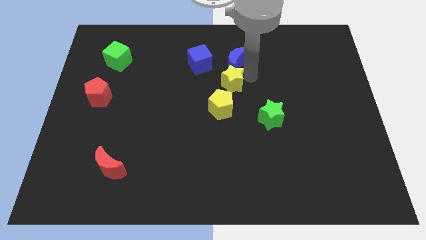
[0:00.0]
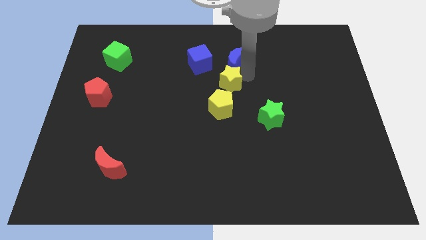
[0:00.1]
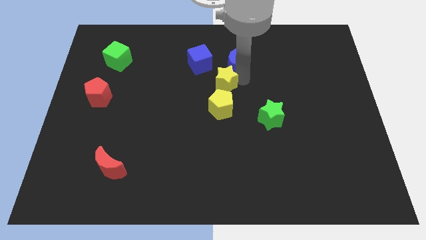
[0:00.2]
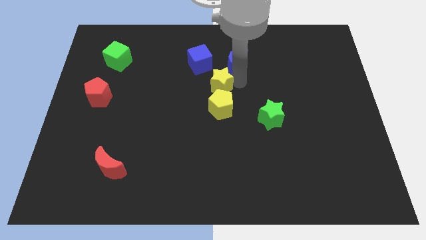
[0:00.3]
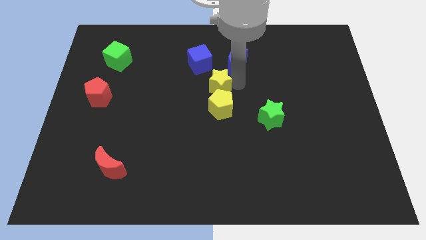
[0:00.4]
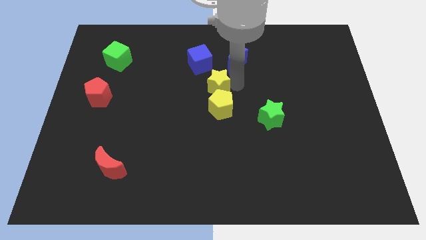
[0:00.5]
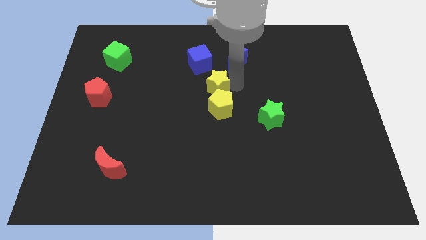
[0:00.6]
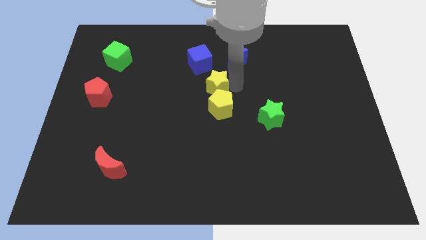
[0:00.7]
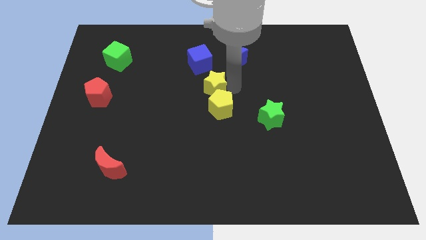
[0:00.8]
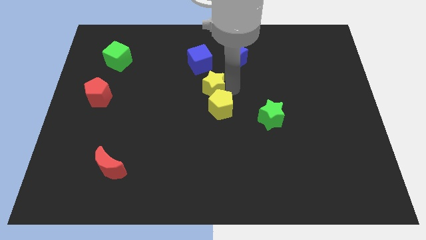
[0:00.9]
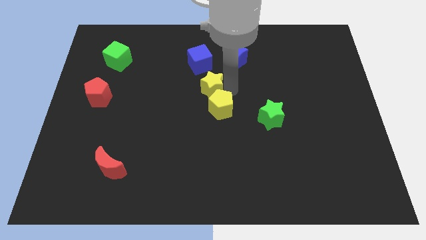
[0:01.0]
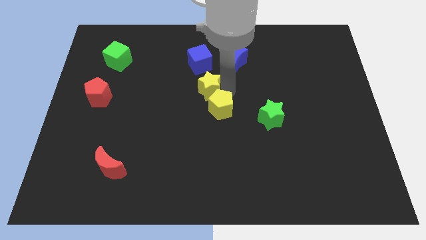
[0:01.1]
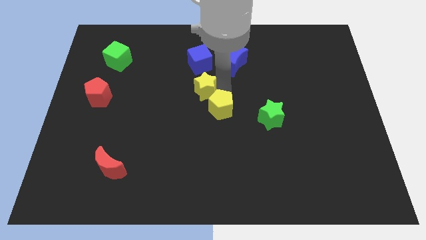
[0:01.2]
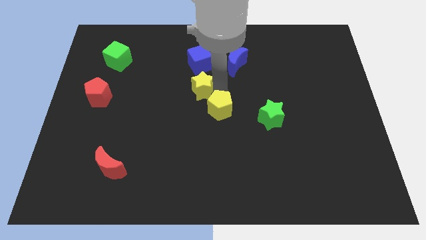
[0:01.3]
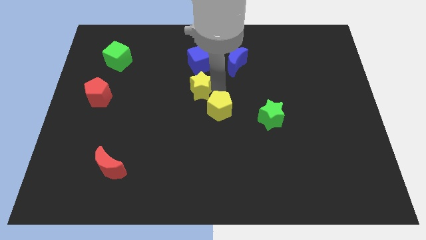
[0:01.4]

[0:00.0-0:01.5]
push the yellow star slightly to the left

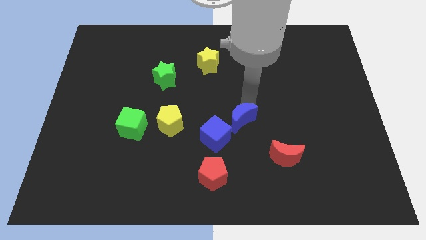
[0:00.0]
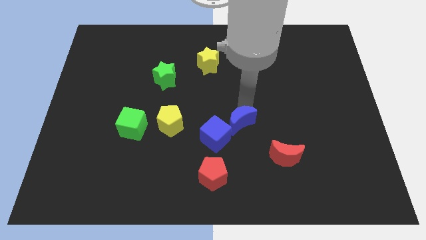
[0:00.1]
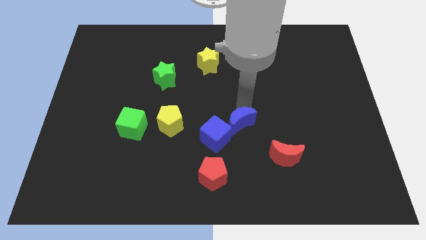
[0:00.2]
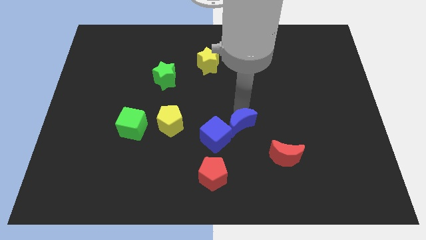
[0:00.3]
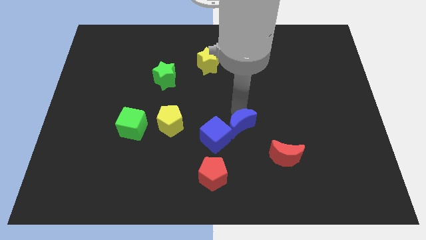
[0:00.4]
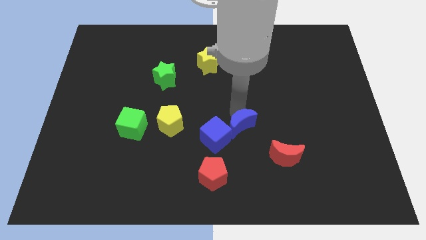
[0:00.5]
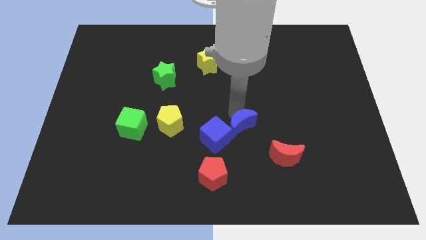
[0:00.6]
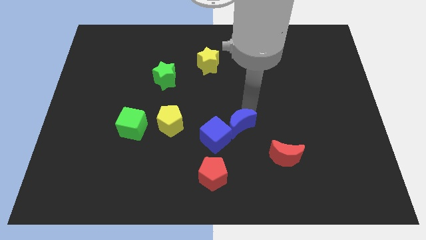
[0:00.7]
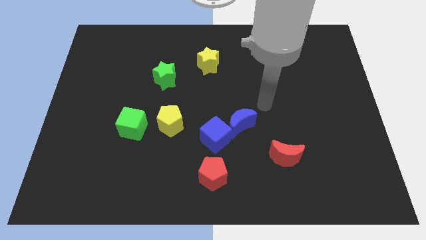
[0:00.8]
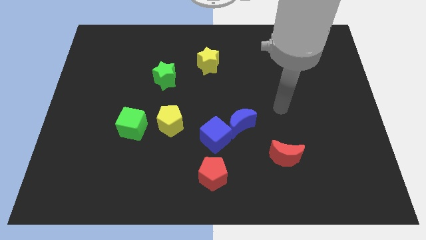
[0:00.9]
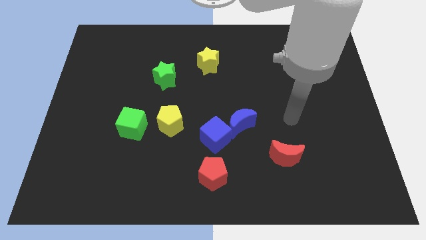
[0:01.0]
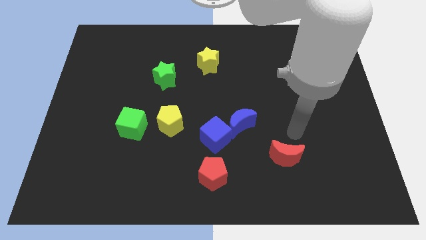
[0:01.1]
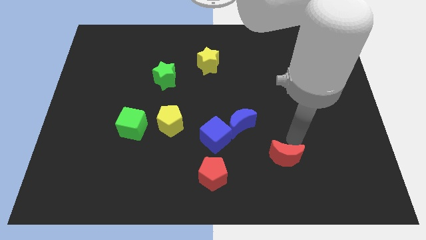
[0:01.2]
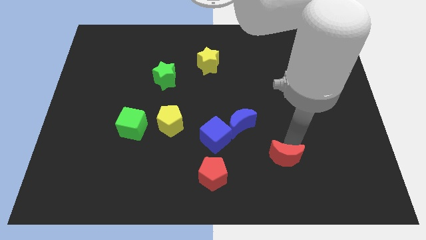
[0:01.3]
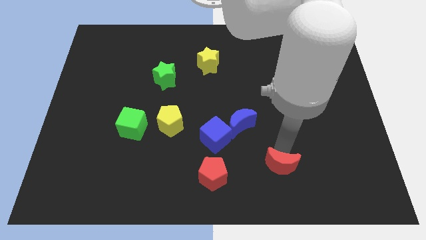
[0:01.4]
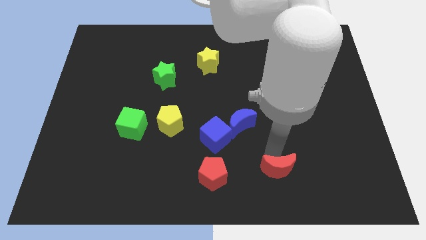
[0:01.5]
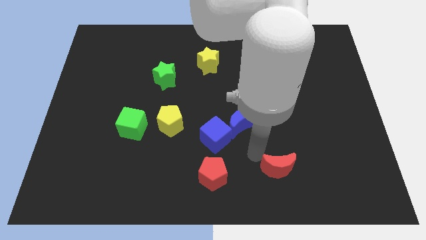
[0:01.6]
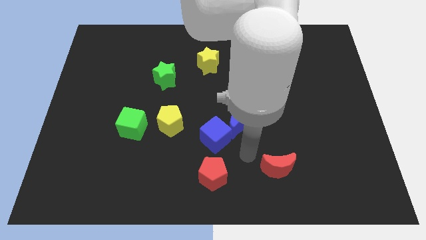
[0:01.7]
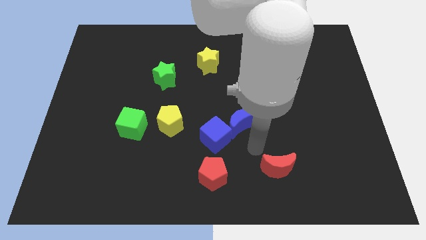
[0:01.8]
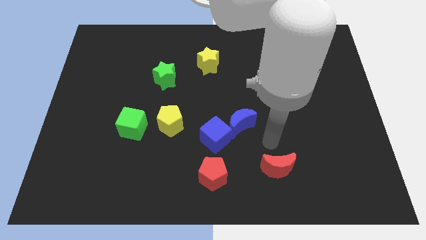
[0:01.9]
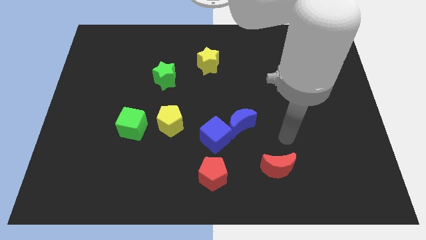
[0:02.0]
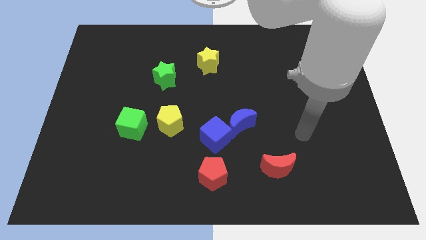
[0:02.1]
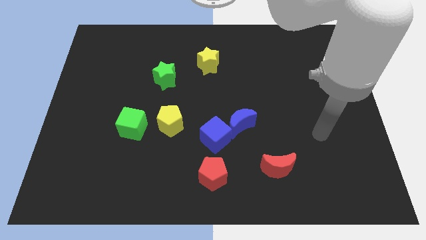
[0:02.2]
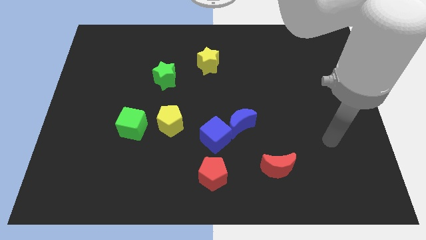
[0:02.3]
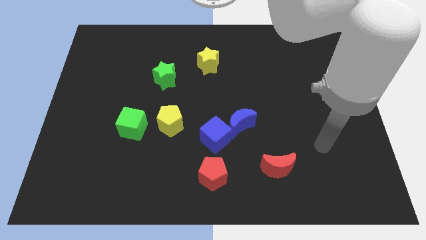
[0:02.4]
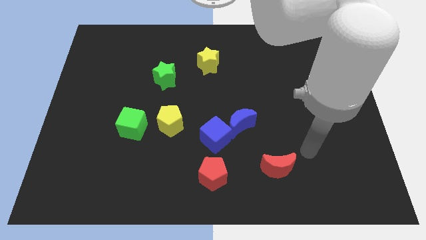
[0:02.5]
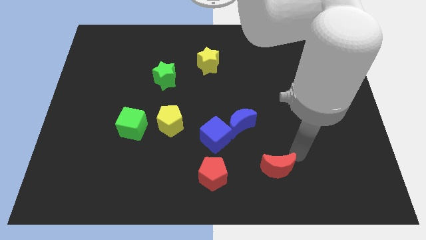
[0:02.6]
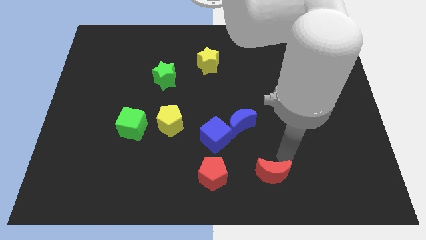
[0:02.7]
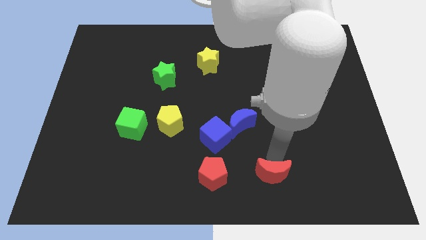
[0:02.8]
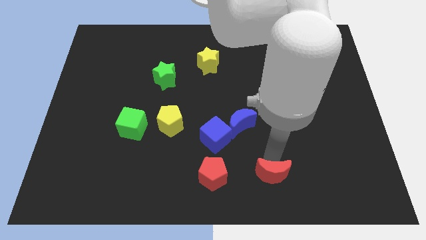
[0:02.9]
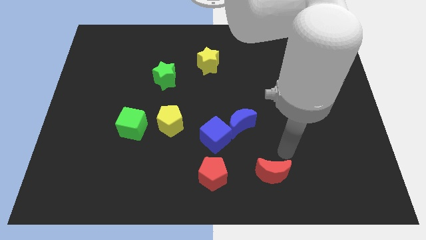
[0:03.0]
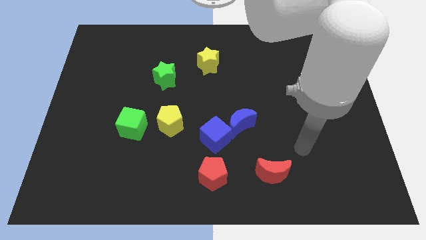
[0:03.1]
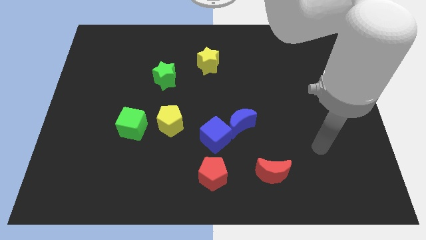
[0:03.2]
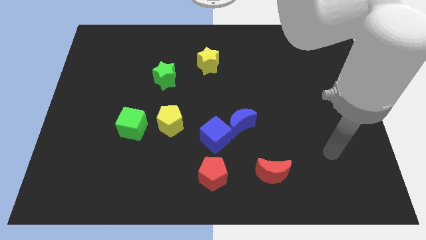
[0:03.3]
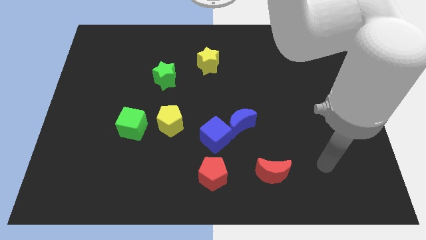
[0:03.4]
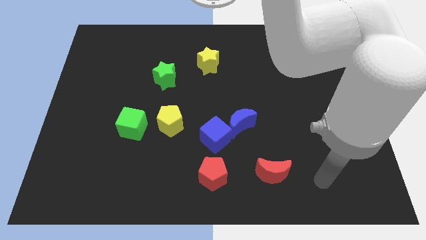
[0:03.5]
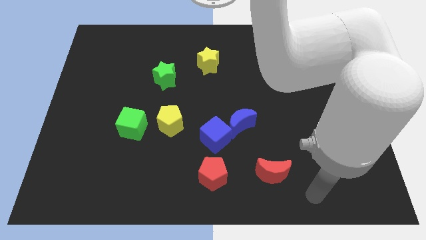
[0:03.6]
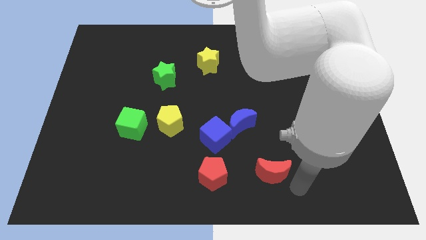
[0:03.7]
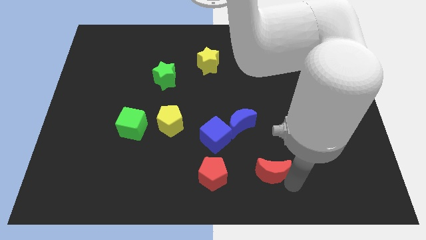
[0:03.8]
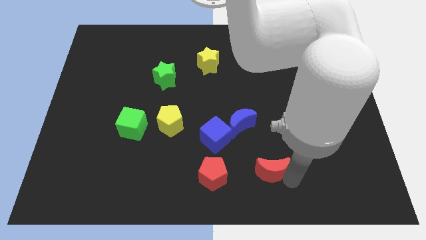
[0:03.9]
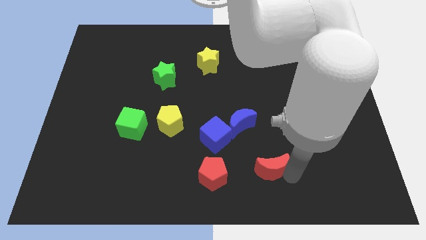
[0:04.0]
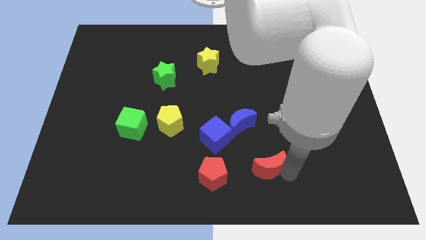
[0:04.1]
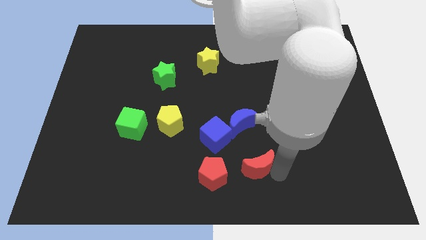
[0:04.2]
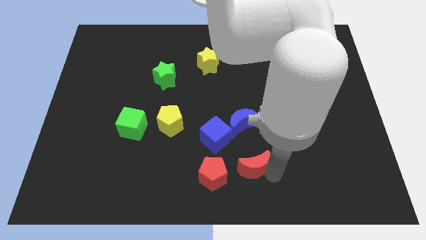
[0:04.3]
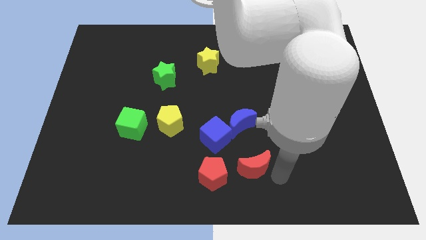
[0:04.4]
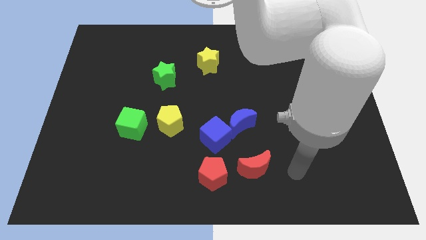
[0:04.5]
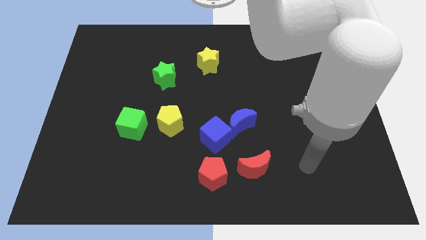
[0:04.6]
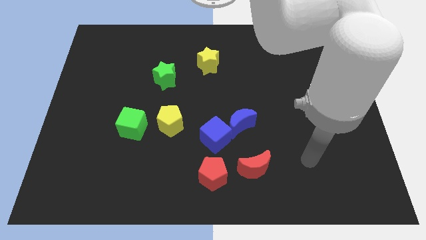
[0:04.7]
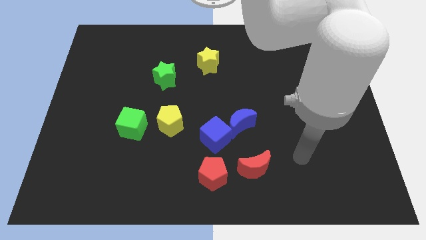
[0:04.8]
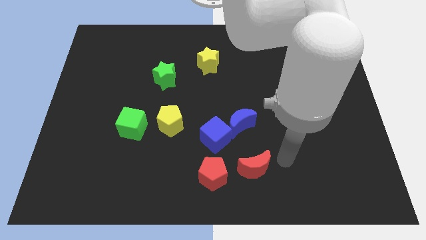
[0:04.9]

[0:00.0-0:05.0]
move the red moon closer to the red pentagon

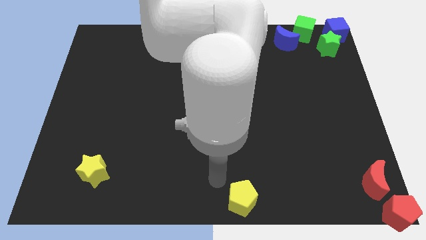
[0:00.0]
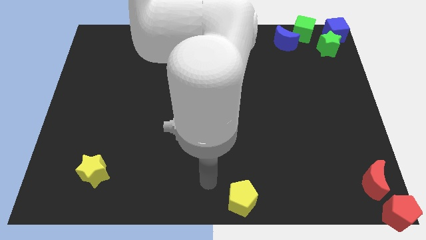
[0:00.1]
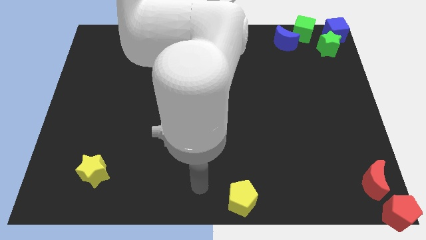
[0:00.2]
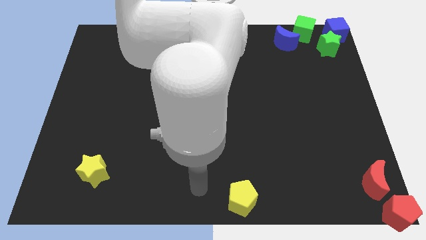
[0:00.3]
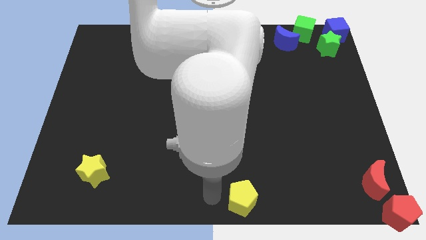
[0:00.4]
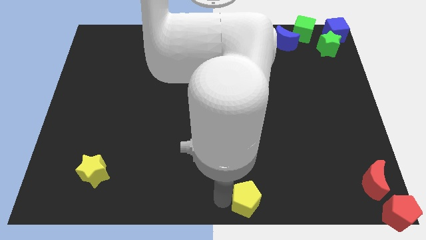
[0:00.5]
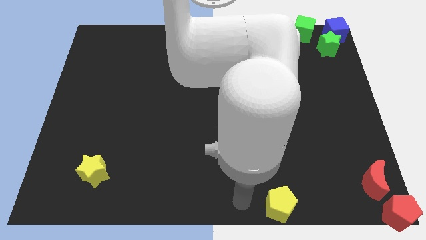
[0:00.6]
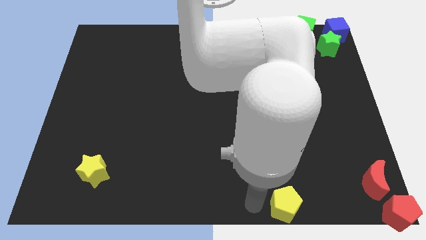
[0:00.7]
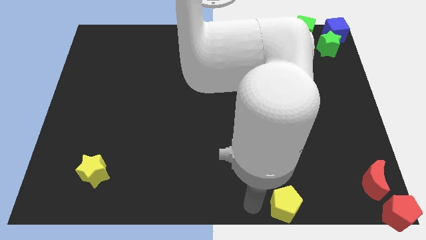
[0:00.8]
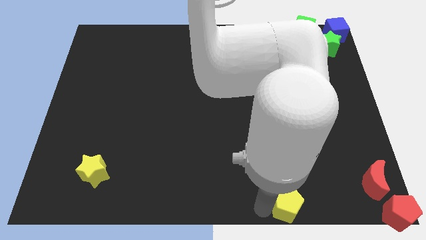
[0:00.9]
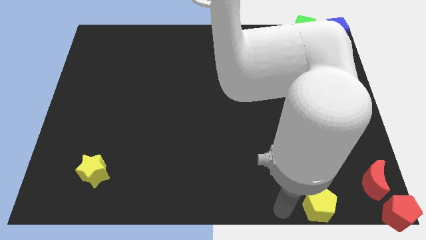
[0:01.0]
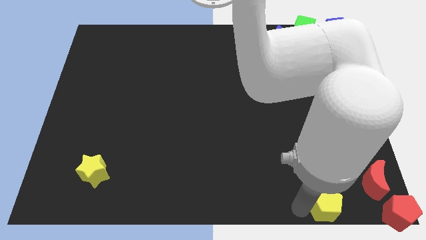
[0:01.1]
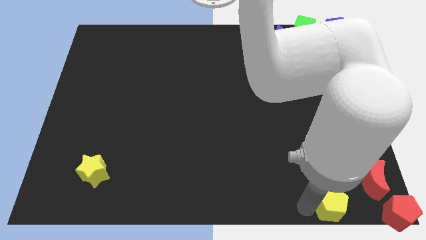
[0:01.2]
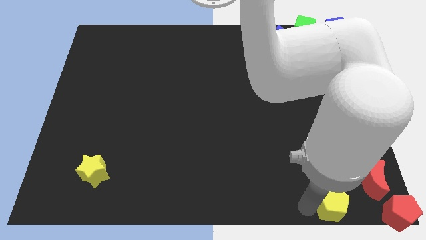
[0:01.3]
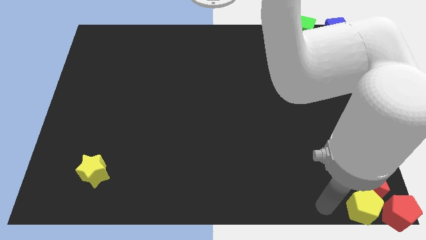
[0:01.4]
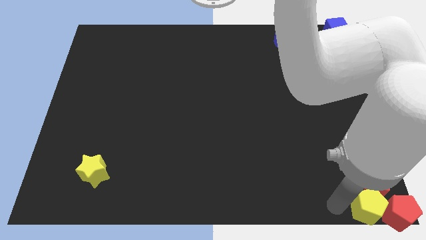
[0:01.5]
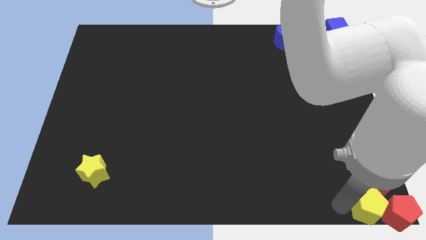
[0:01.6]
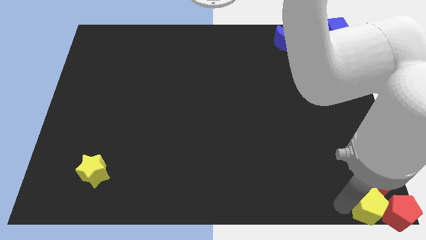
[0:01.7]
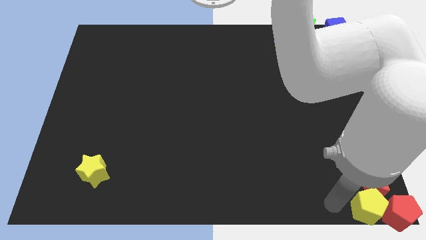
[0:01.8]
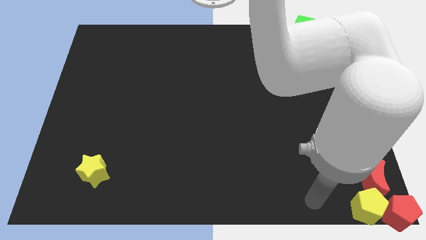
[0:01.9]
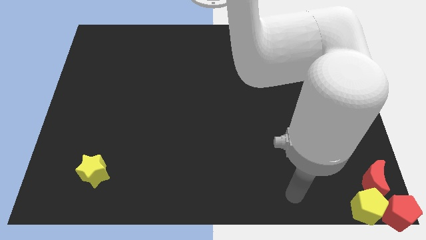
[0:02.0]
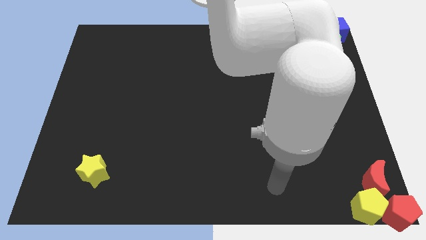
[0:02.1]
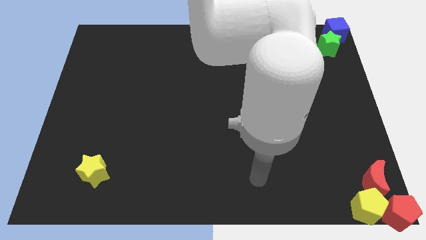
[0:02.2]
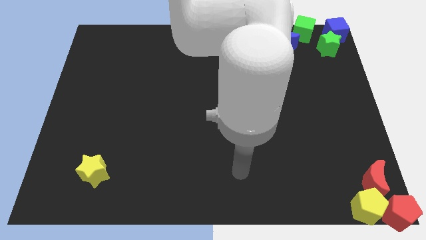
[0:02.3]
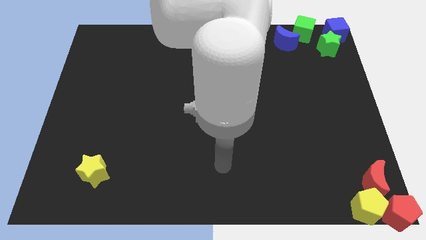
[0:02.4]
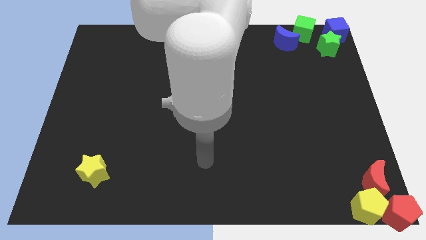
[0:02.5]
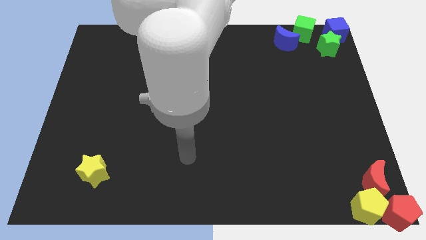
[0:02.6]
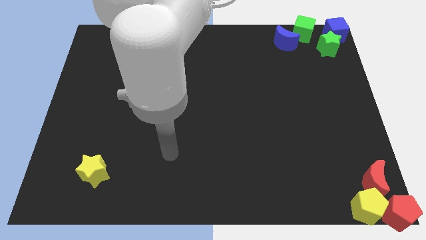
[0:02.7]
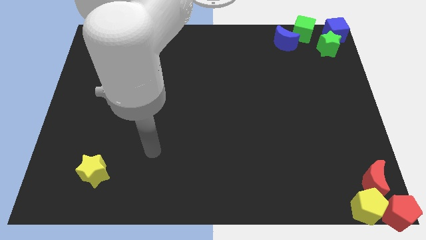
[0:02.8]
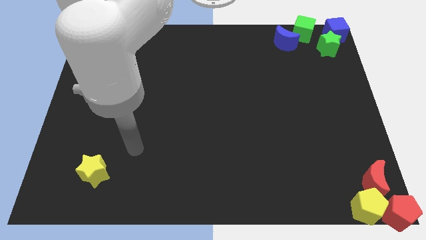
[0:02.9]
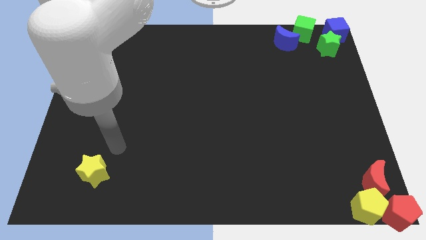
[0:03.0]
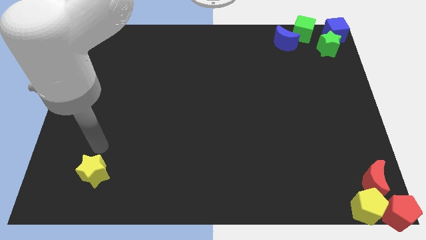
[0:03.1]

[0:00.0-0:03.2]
slide the yellow pentagon into the red blocks
